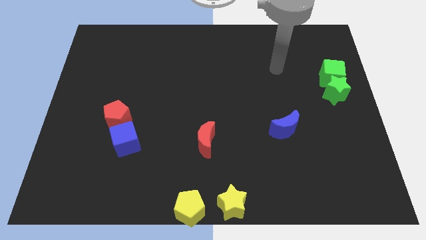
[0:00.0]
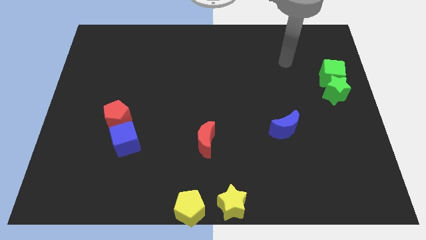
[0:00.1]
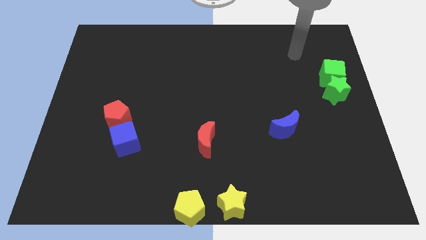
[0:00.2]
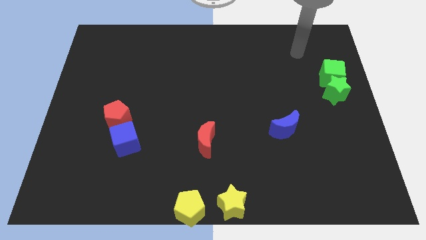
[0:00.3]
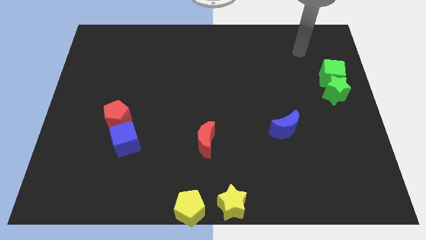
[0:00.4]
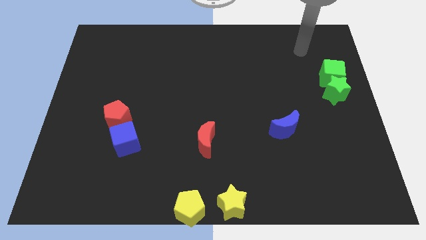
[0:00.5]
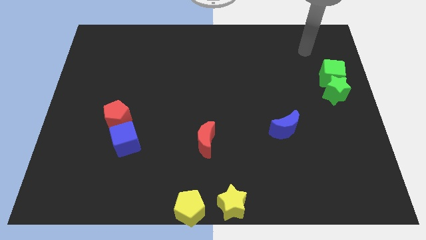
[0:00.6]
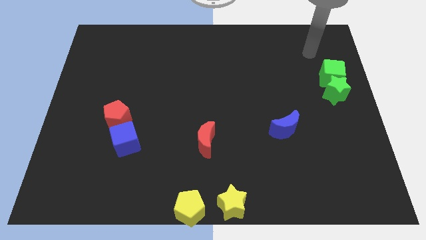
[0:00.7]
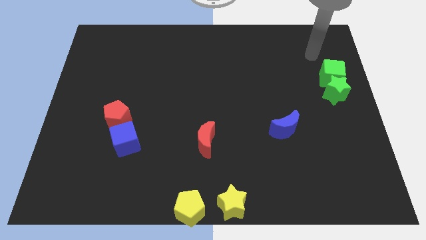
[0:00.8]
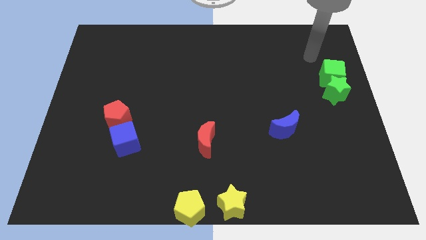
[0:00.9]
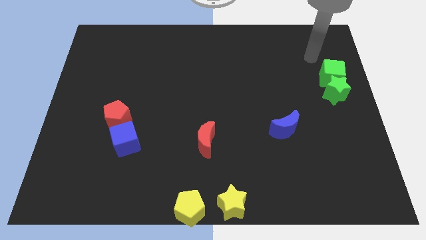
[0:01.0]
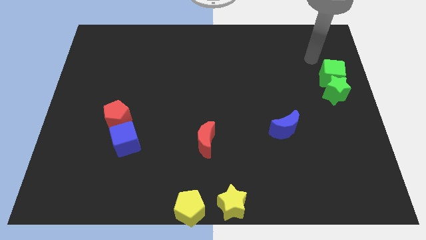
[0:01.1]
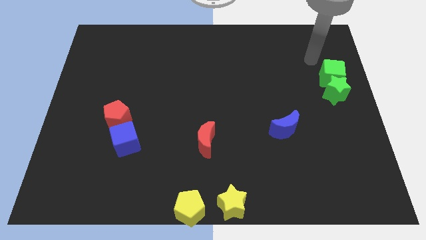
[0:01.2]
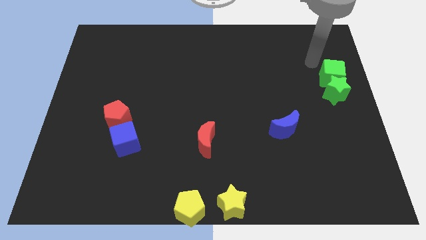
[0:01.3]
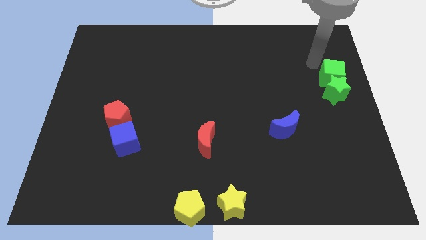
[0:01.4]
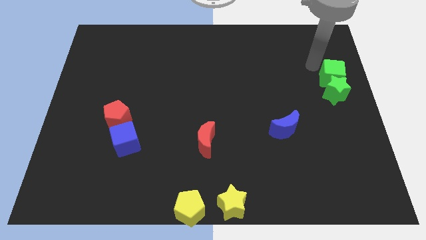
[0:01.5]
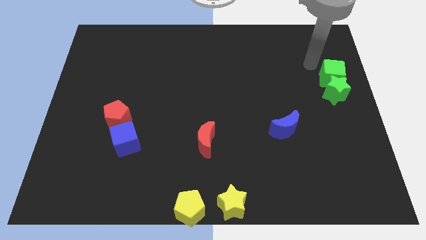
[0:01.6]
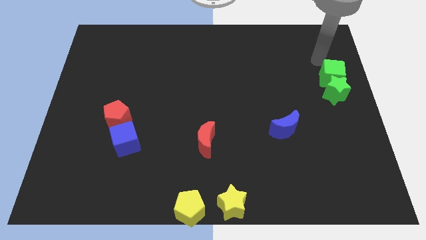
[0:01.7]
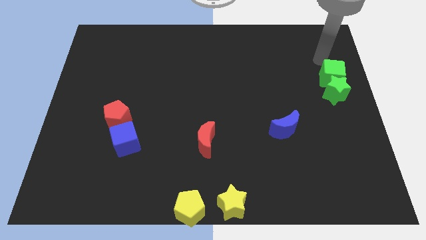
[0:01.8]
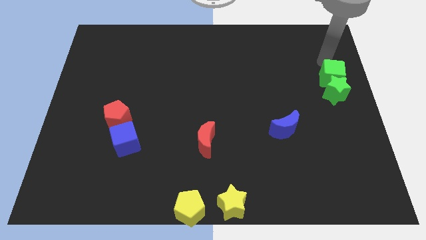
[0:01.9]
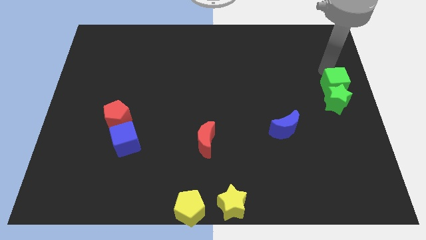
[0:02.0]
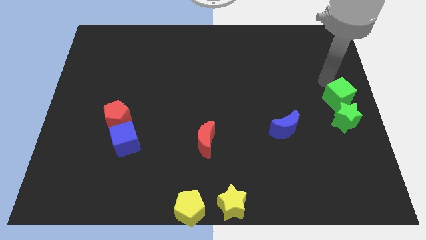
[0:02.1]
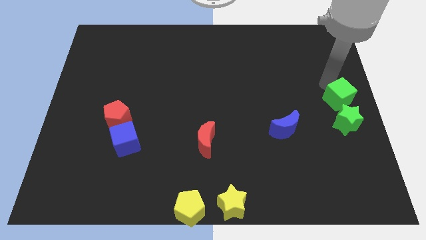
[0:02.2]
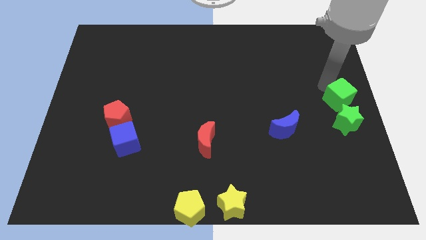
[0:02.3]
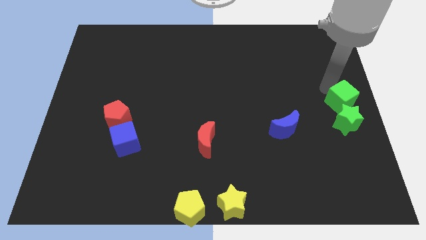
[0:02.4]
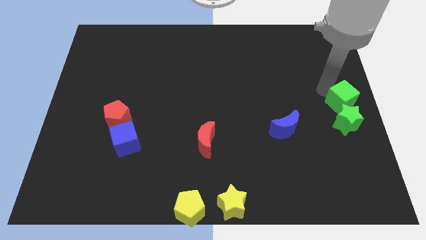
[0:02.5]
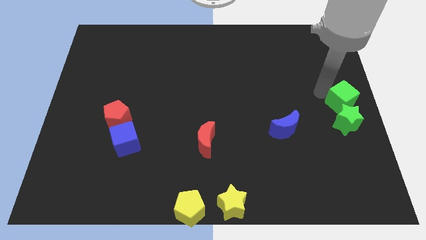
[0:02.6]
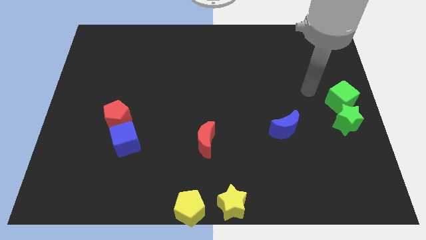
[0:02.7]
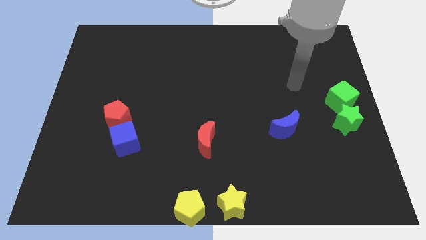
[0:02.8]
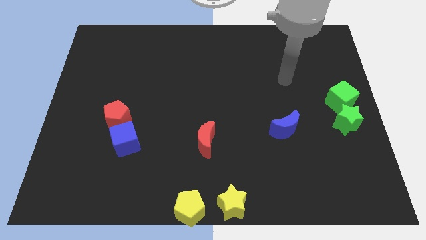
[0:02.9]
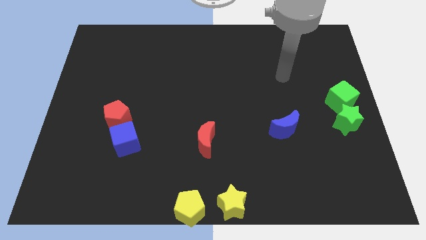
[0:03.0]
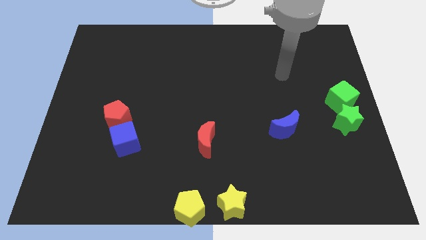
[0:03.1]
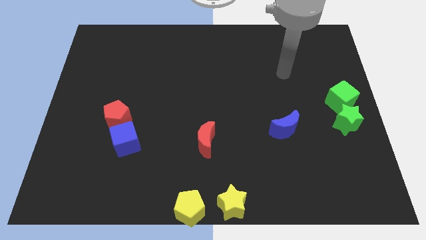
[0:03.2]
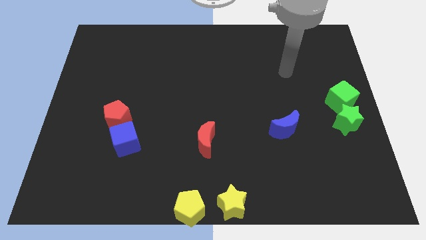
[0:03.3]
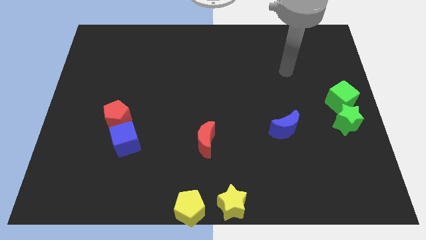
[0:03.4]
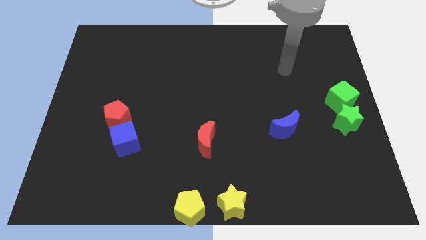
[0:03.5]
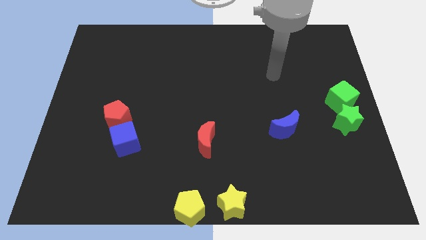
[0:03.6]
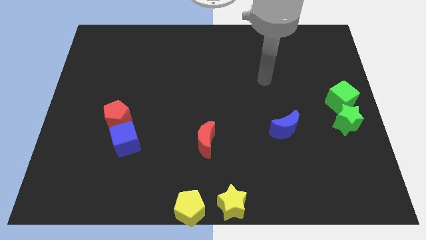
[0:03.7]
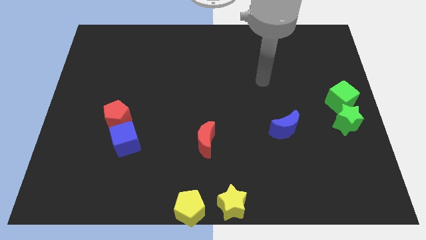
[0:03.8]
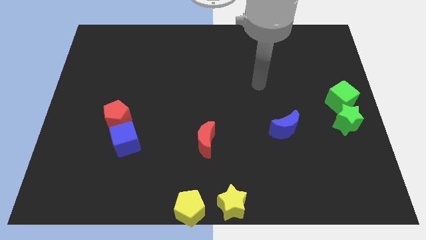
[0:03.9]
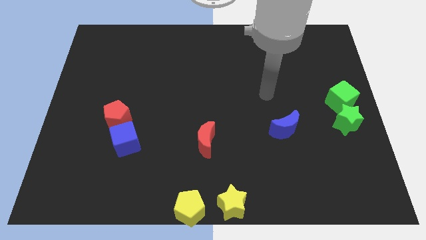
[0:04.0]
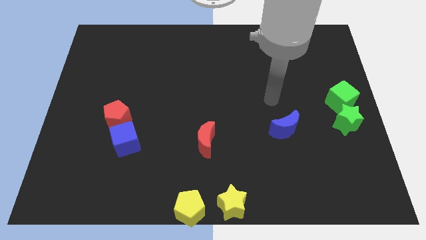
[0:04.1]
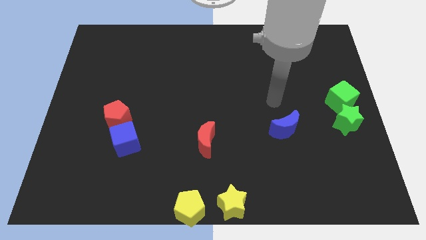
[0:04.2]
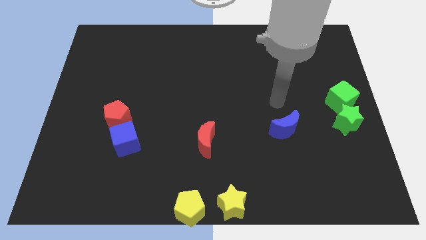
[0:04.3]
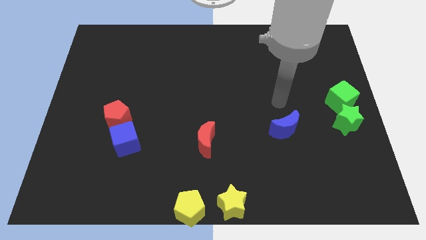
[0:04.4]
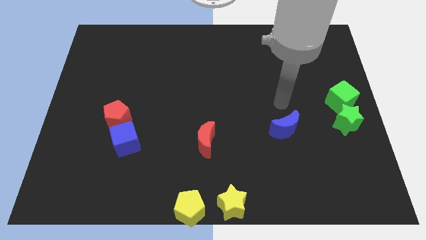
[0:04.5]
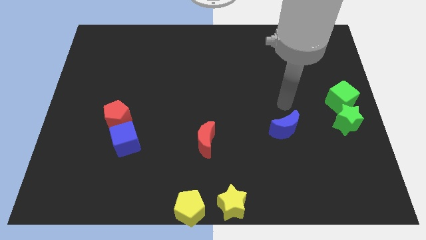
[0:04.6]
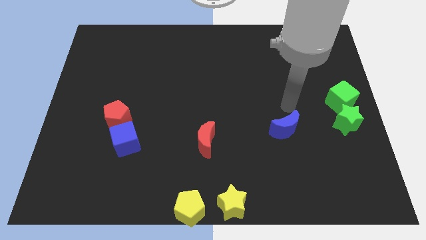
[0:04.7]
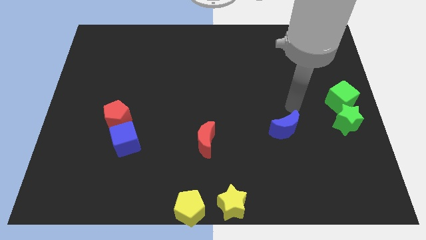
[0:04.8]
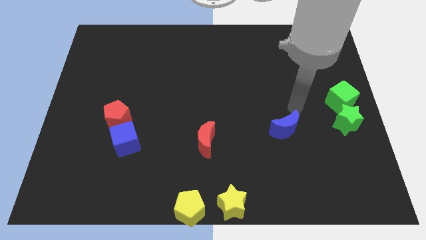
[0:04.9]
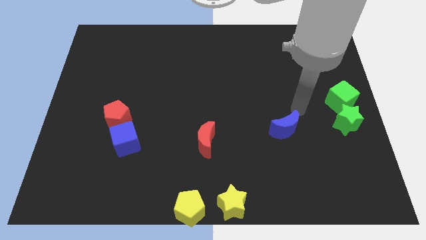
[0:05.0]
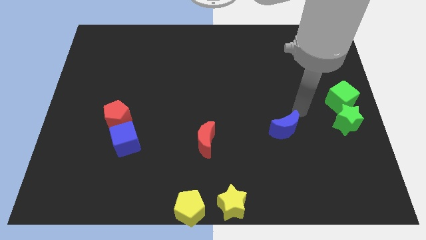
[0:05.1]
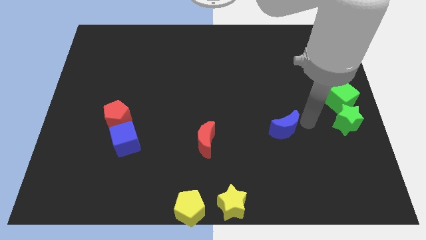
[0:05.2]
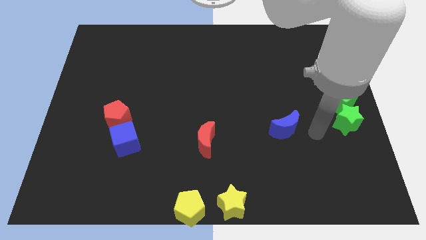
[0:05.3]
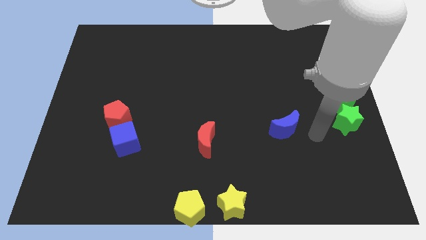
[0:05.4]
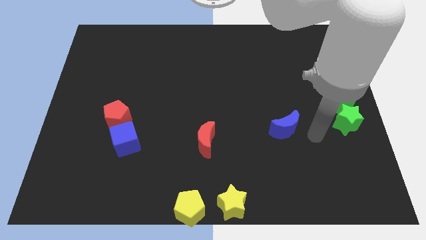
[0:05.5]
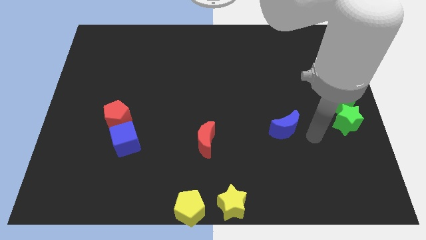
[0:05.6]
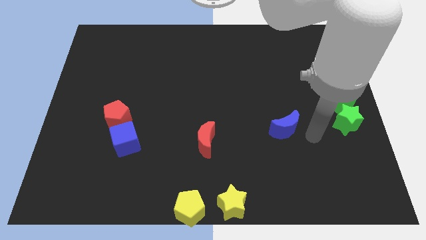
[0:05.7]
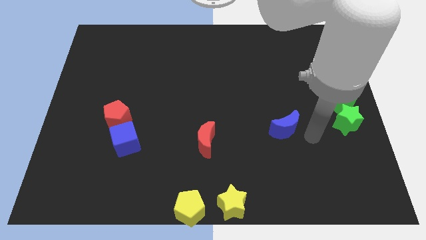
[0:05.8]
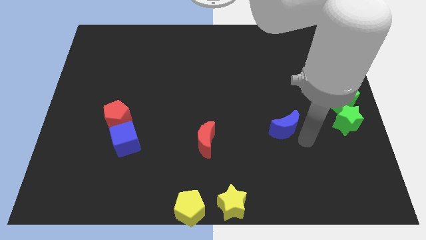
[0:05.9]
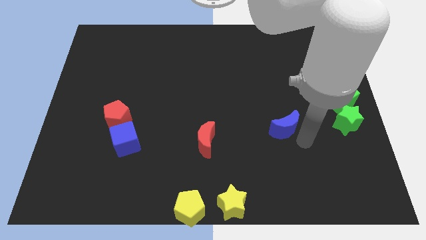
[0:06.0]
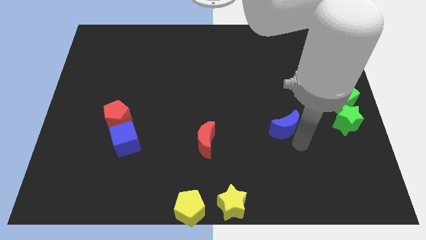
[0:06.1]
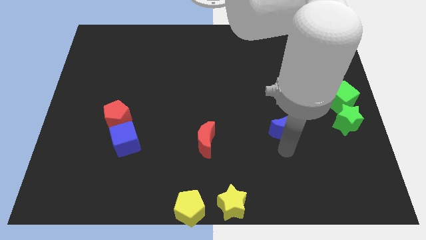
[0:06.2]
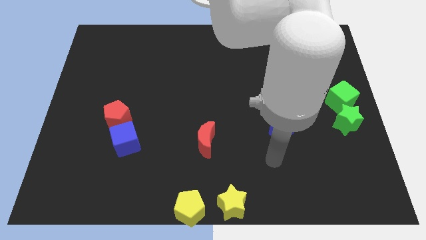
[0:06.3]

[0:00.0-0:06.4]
move the green blocks towards bottom

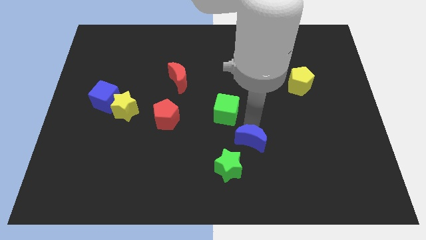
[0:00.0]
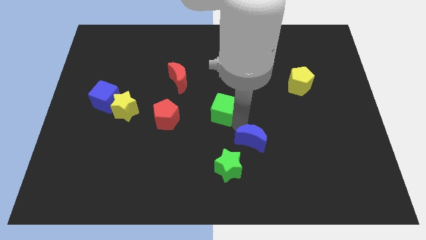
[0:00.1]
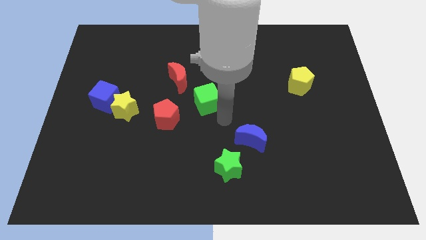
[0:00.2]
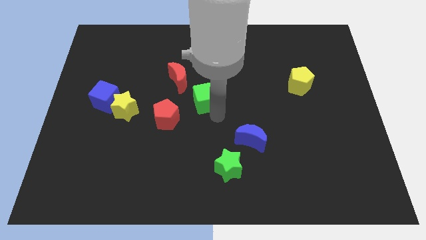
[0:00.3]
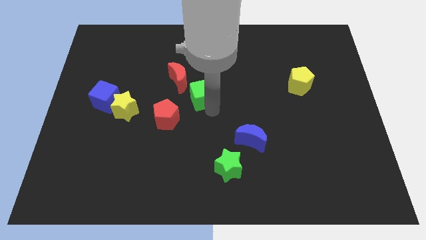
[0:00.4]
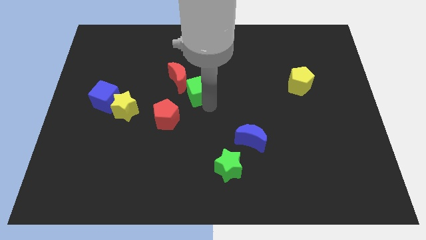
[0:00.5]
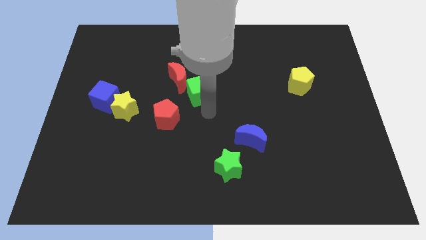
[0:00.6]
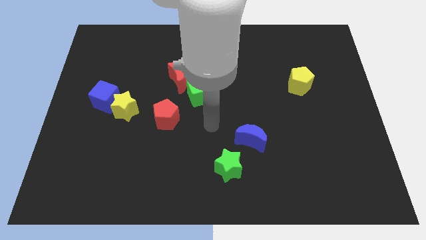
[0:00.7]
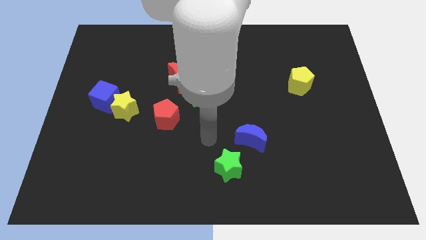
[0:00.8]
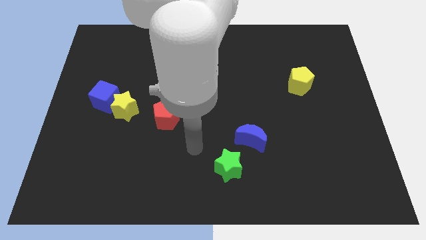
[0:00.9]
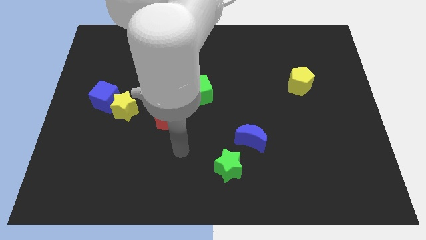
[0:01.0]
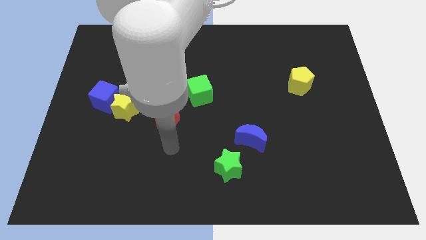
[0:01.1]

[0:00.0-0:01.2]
push the green cube towards the red moon

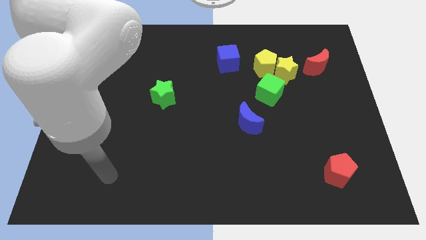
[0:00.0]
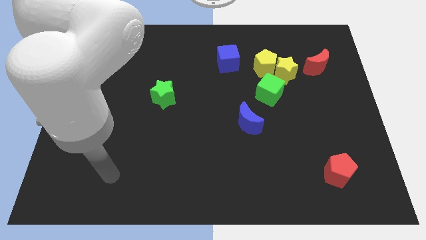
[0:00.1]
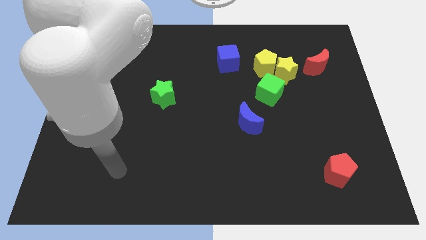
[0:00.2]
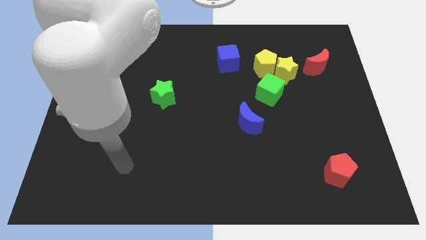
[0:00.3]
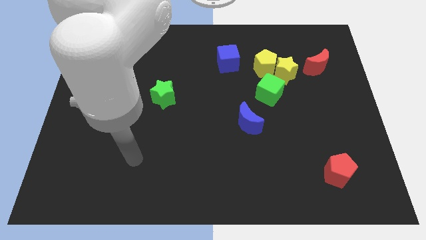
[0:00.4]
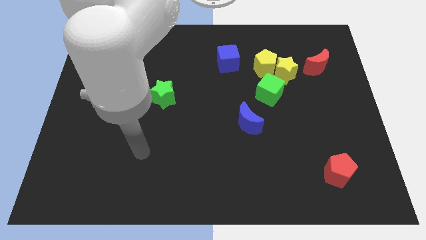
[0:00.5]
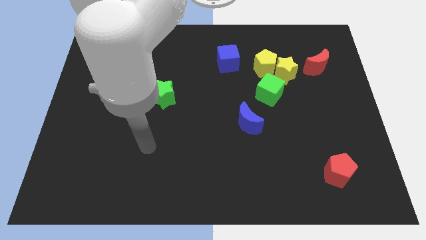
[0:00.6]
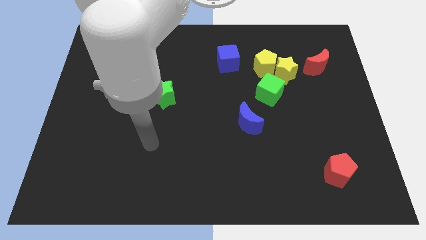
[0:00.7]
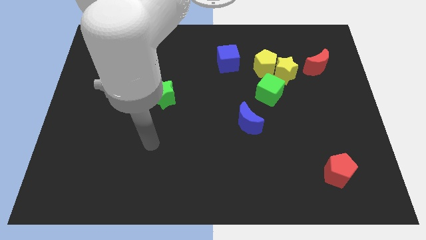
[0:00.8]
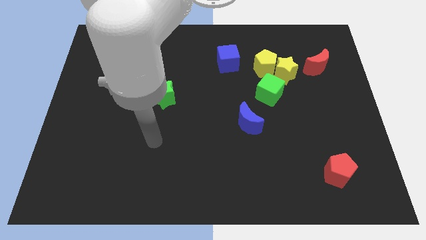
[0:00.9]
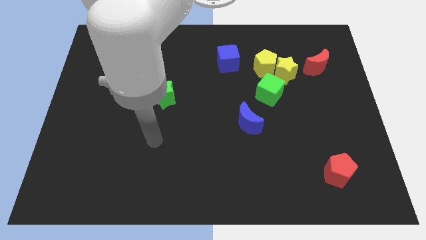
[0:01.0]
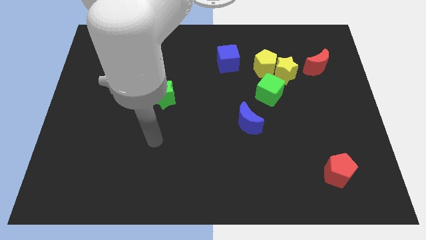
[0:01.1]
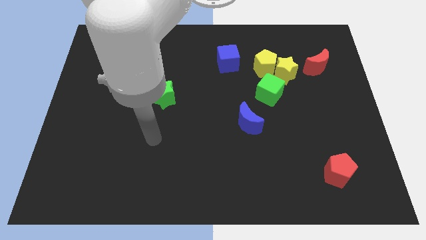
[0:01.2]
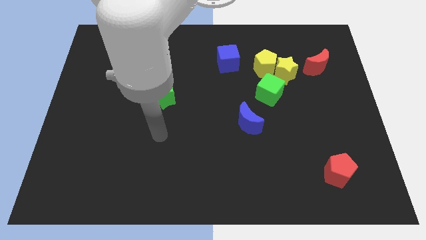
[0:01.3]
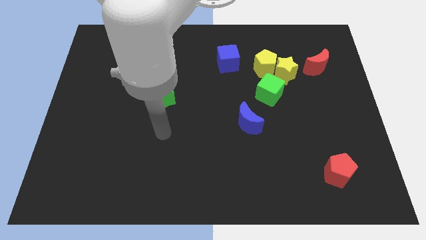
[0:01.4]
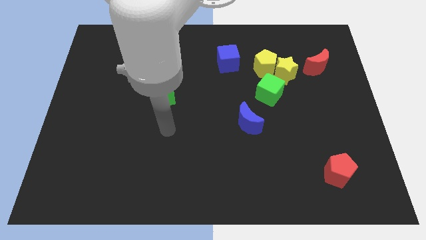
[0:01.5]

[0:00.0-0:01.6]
point your arm at the bottom of the green star
